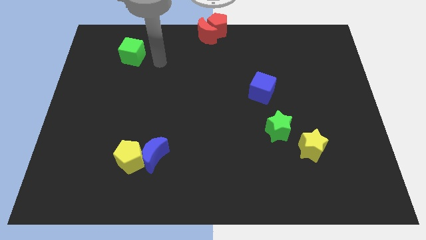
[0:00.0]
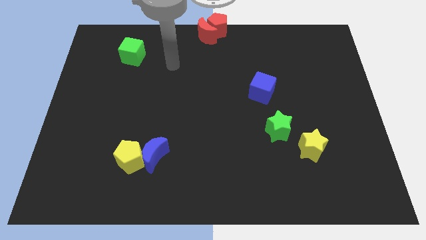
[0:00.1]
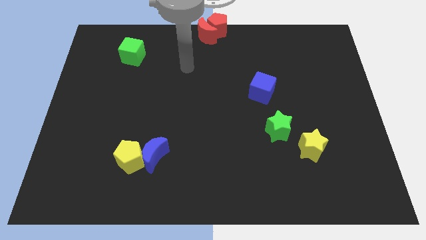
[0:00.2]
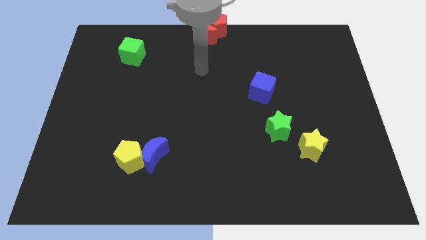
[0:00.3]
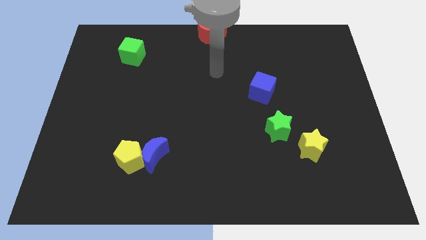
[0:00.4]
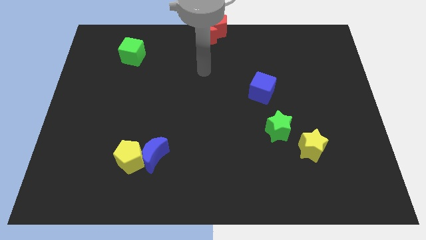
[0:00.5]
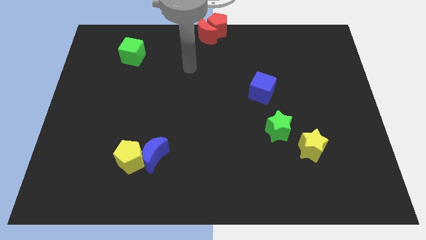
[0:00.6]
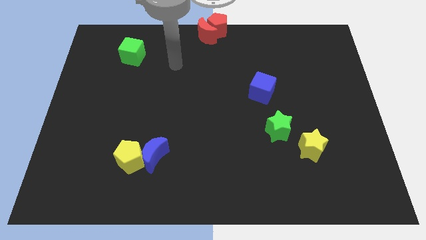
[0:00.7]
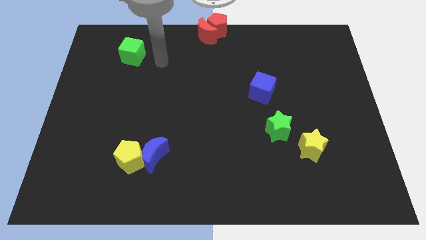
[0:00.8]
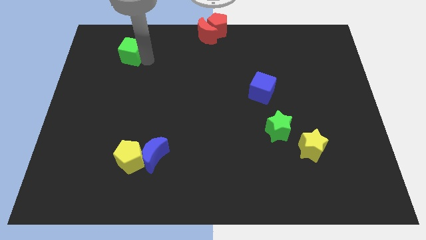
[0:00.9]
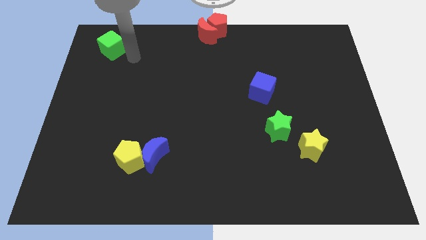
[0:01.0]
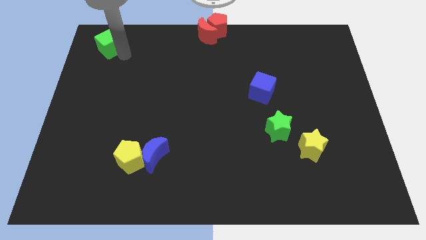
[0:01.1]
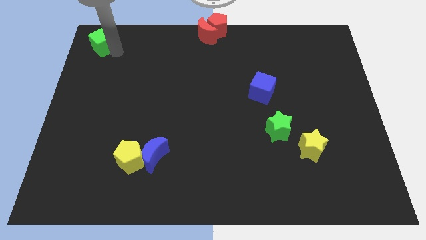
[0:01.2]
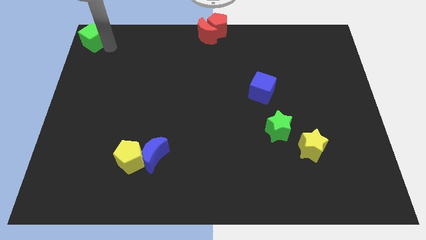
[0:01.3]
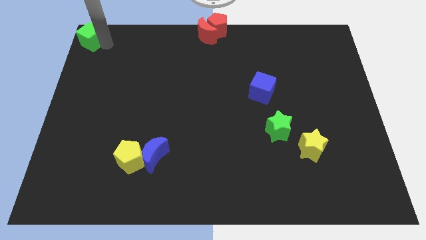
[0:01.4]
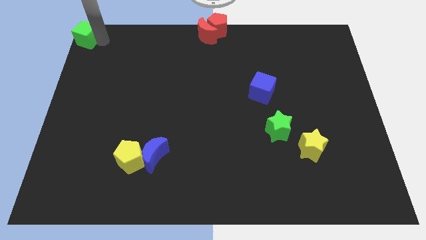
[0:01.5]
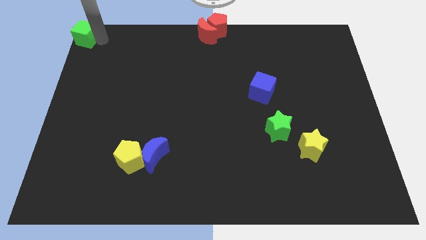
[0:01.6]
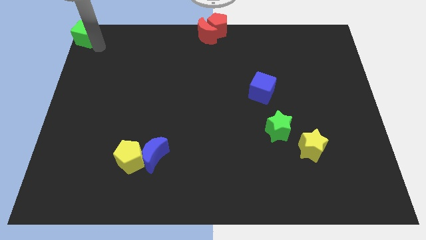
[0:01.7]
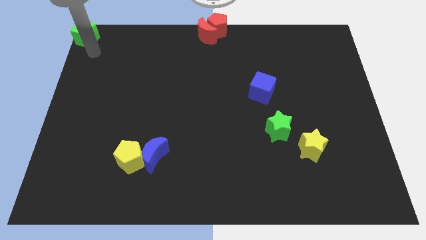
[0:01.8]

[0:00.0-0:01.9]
push the green cube to the top left corner of the board

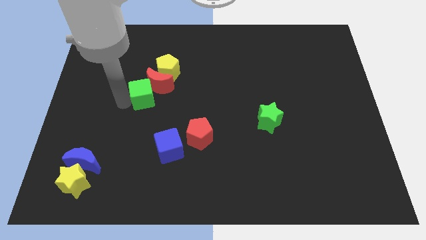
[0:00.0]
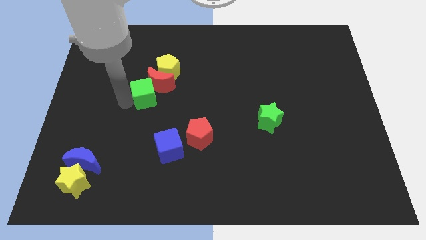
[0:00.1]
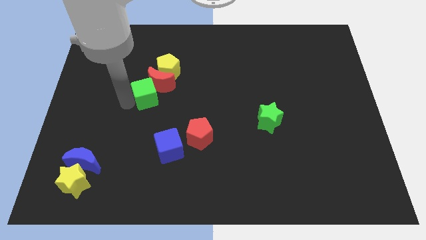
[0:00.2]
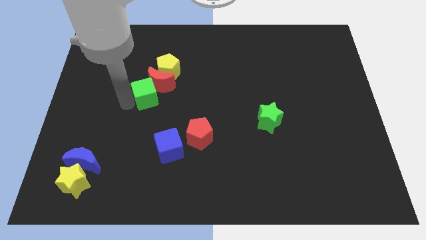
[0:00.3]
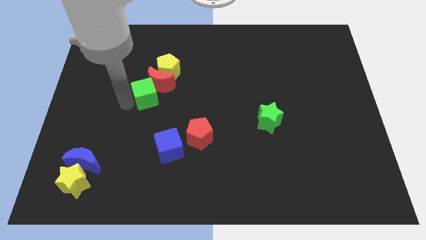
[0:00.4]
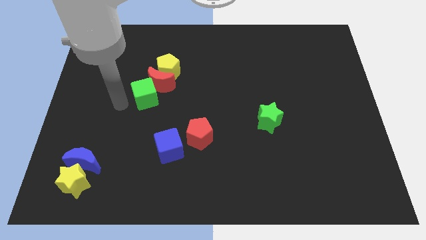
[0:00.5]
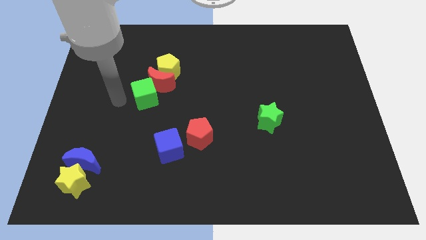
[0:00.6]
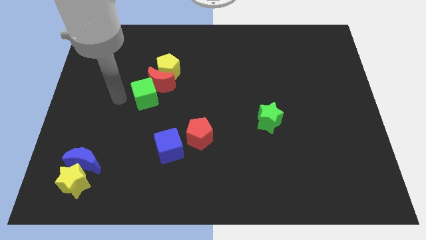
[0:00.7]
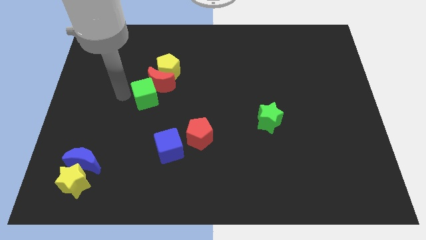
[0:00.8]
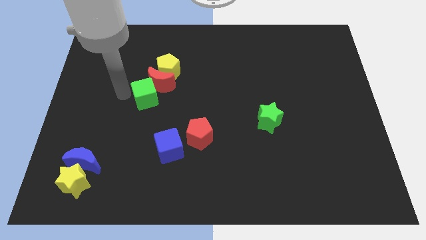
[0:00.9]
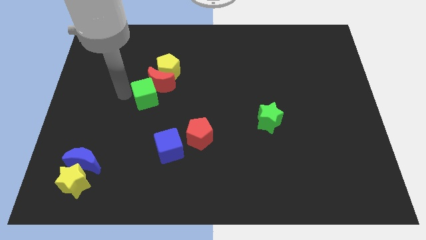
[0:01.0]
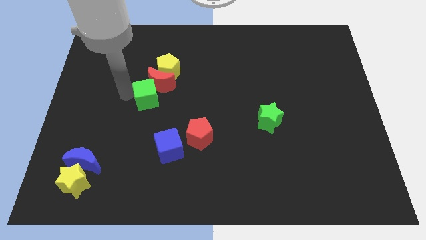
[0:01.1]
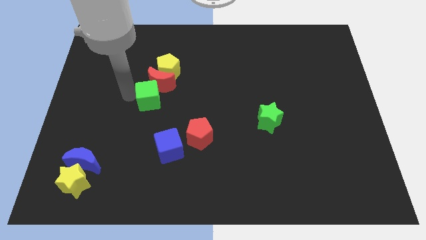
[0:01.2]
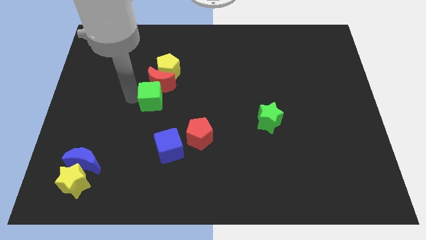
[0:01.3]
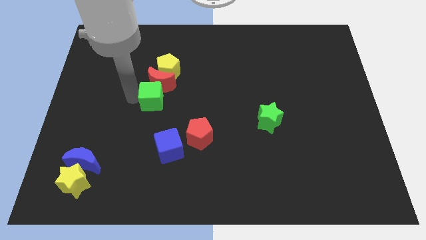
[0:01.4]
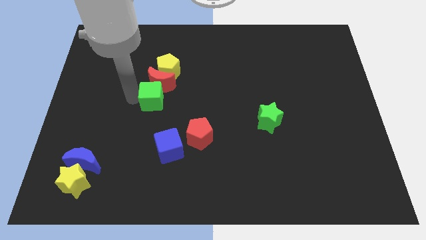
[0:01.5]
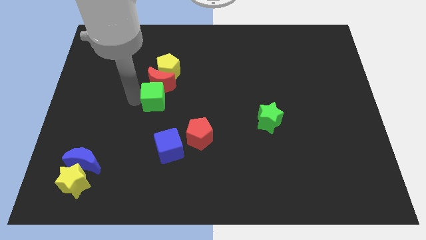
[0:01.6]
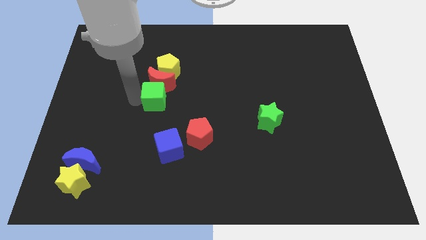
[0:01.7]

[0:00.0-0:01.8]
place the green cube below the red crescent

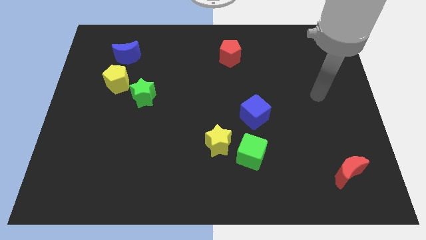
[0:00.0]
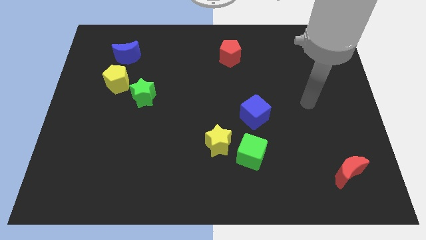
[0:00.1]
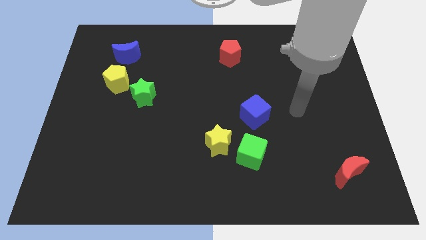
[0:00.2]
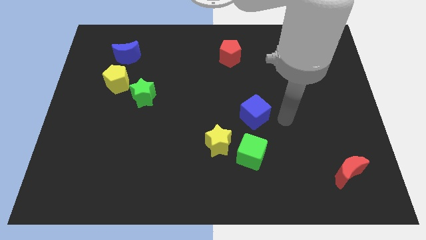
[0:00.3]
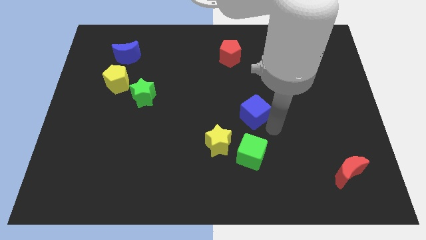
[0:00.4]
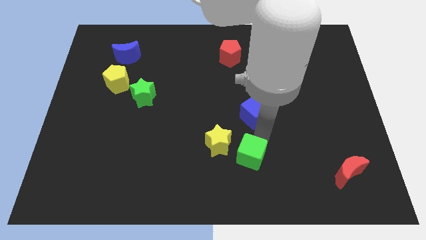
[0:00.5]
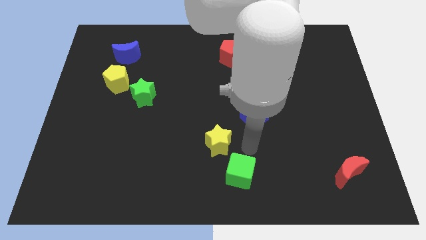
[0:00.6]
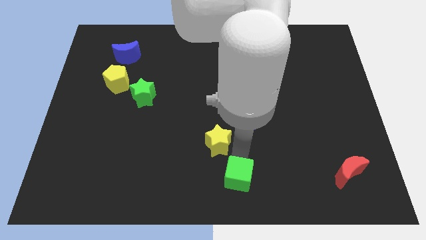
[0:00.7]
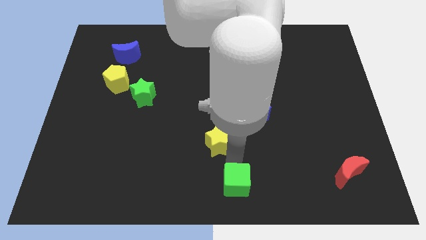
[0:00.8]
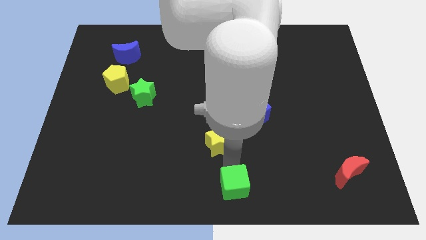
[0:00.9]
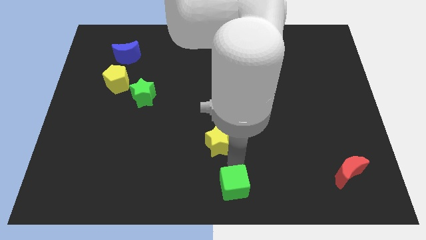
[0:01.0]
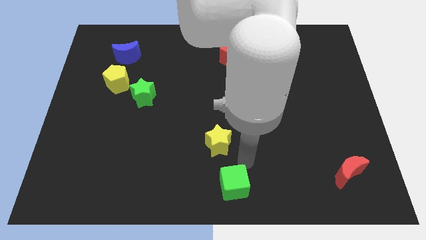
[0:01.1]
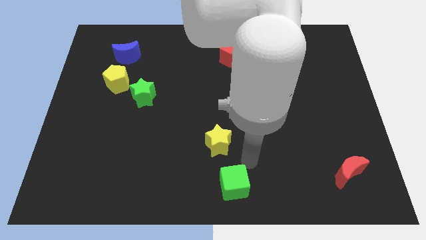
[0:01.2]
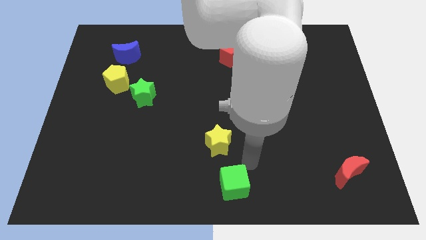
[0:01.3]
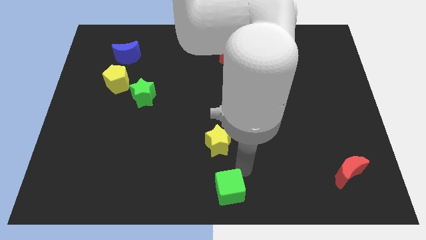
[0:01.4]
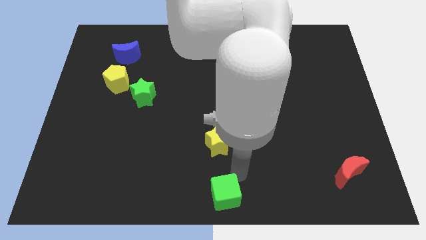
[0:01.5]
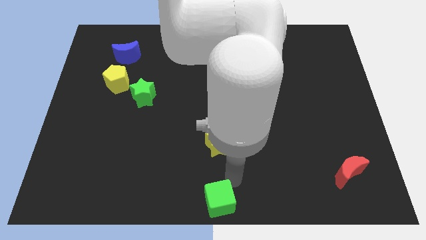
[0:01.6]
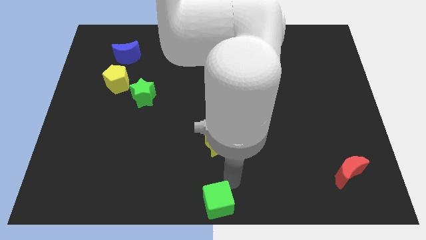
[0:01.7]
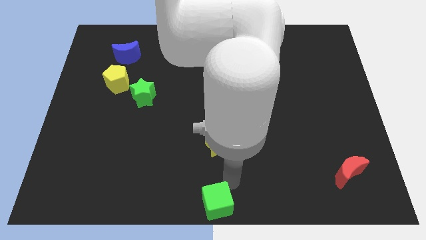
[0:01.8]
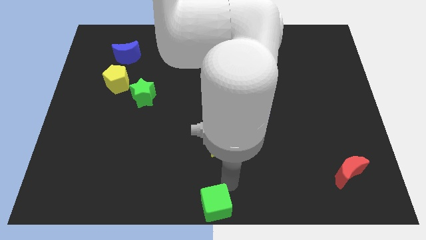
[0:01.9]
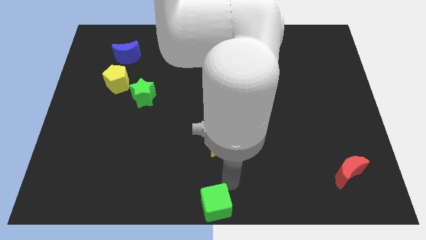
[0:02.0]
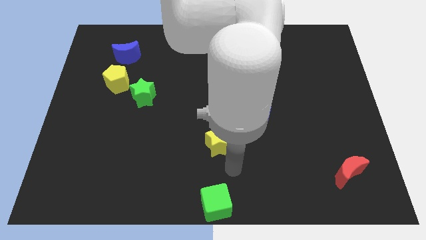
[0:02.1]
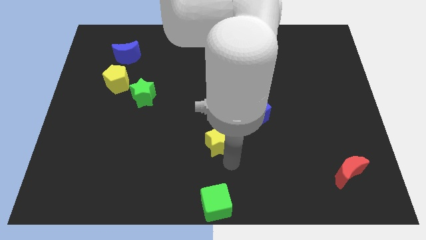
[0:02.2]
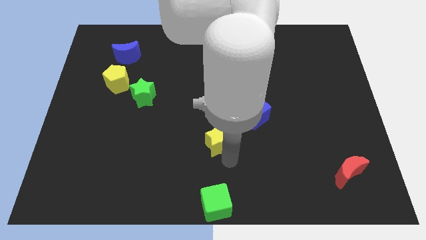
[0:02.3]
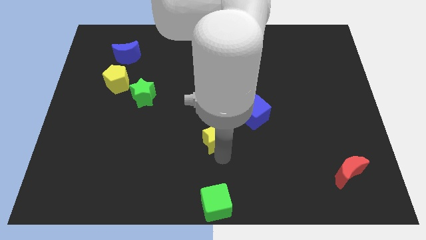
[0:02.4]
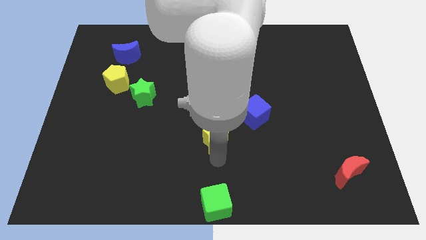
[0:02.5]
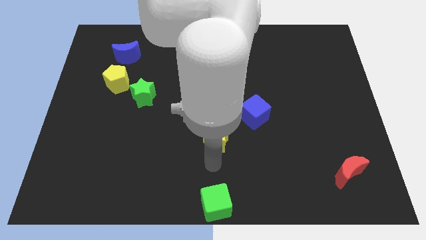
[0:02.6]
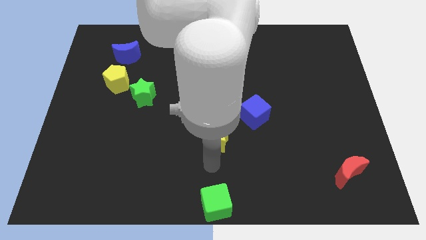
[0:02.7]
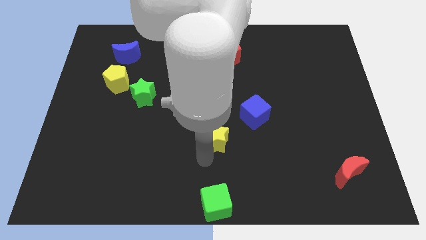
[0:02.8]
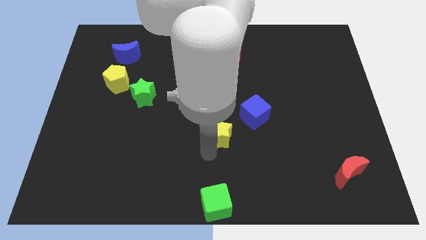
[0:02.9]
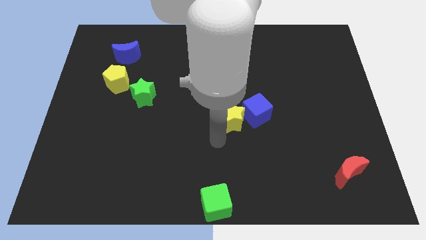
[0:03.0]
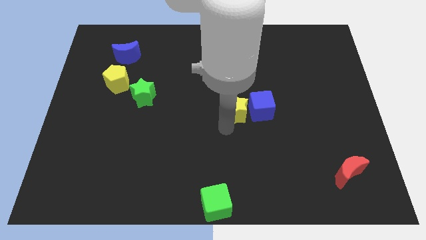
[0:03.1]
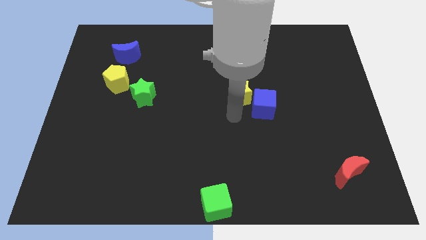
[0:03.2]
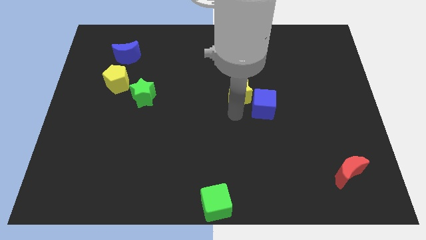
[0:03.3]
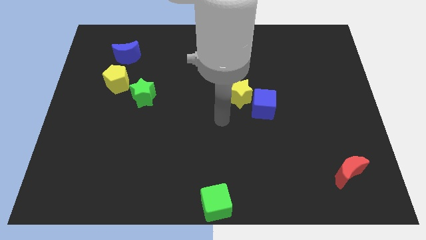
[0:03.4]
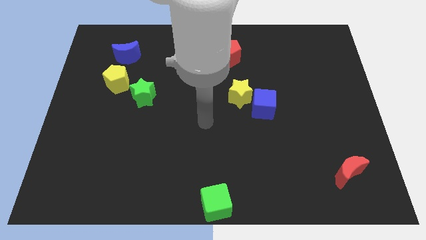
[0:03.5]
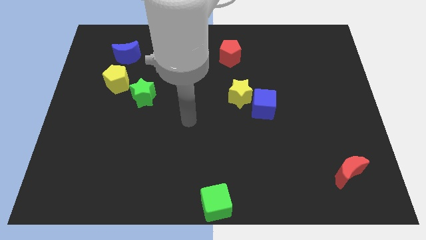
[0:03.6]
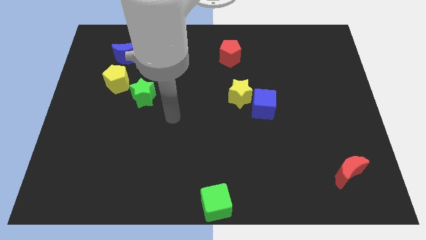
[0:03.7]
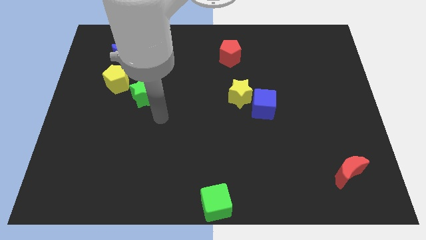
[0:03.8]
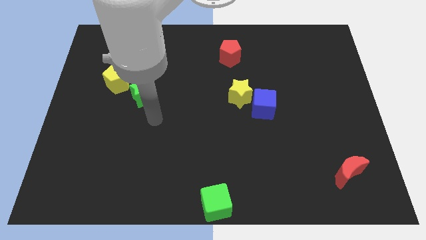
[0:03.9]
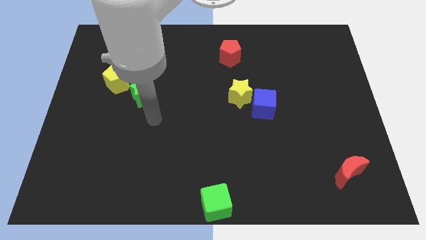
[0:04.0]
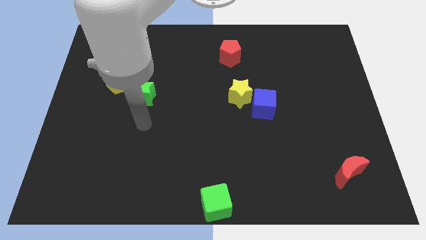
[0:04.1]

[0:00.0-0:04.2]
place the yellow star to the top left of the blue cube

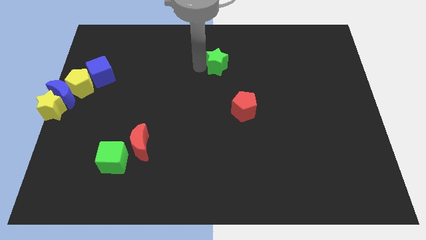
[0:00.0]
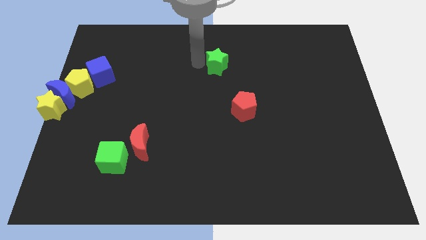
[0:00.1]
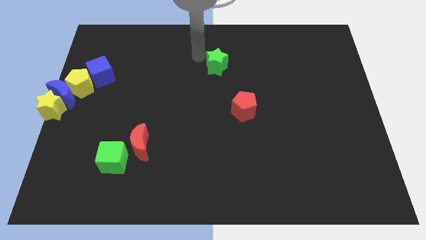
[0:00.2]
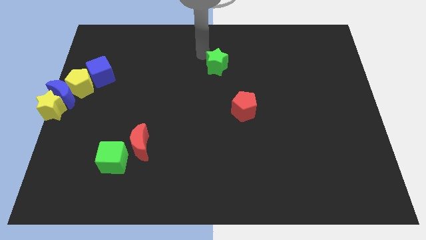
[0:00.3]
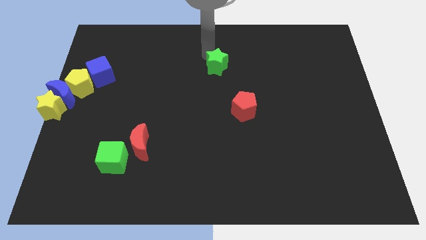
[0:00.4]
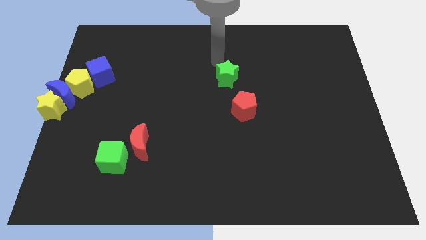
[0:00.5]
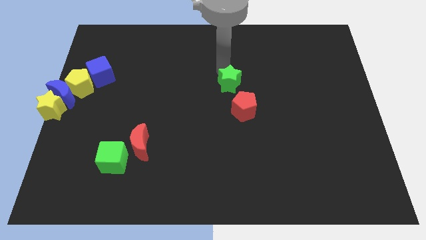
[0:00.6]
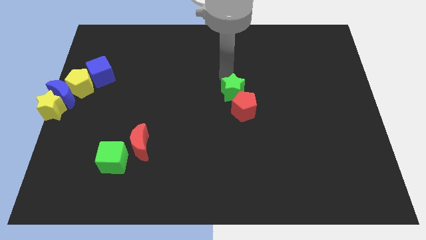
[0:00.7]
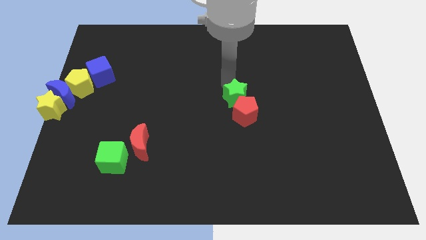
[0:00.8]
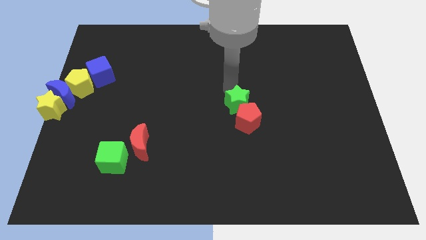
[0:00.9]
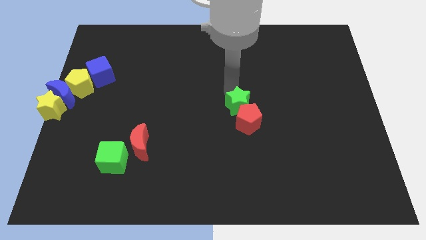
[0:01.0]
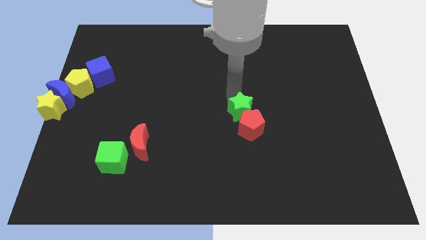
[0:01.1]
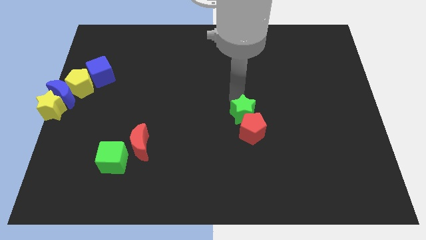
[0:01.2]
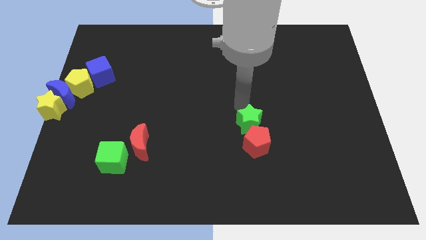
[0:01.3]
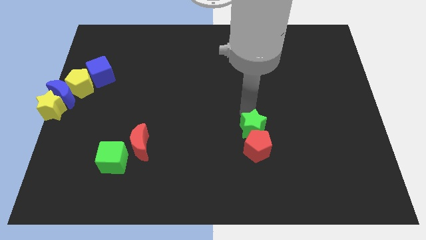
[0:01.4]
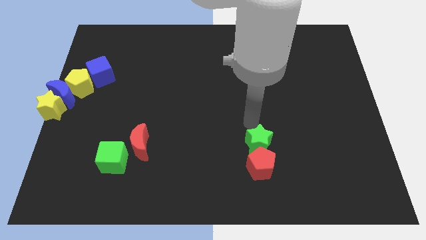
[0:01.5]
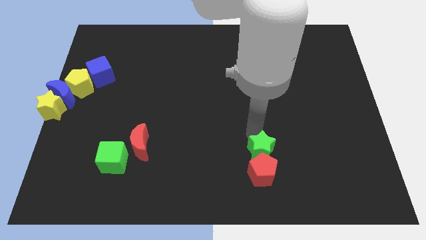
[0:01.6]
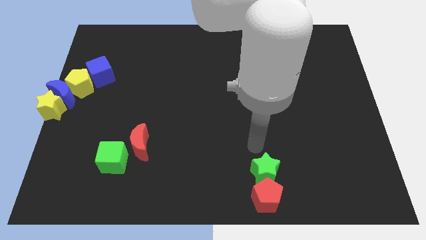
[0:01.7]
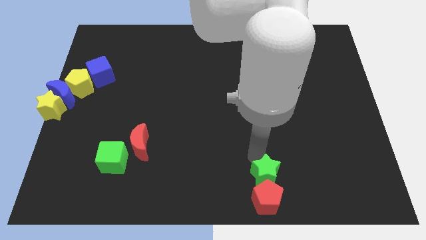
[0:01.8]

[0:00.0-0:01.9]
push the green star into the red pentagon
